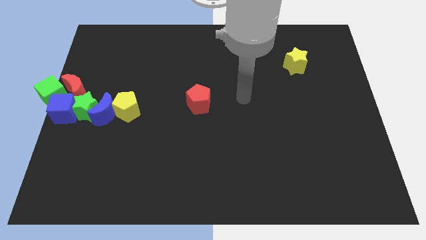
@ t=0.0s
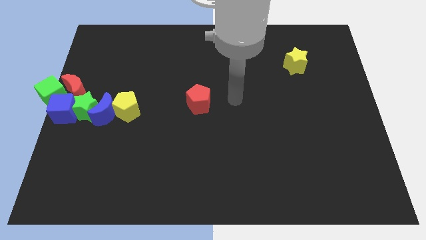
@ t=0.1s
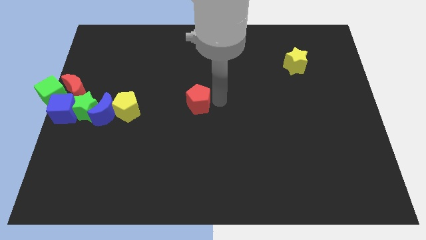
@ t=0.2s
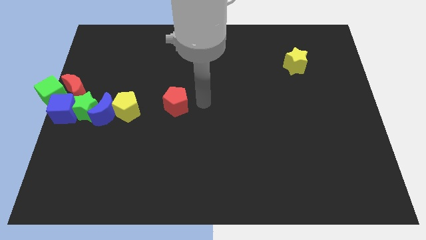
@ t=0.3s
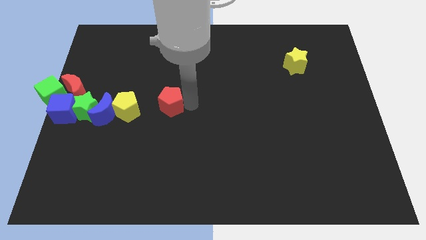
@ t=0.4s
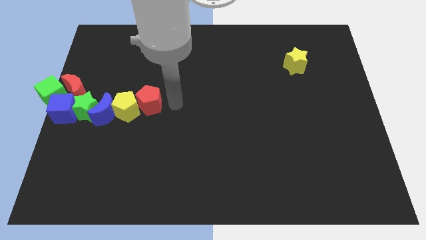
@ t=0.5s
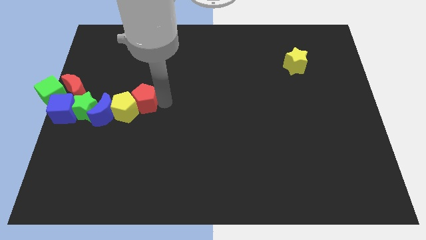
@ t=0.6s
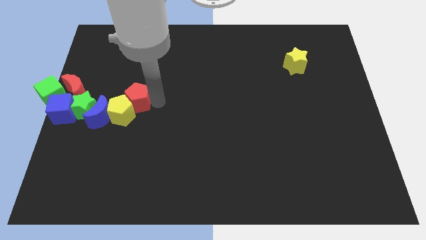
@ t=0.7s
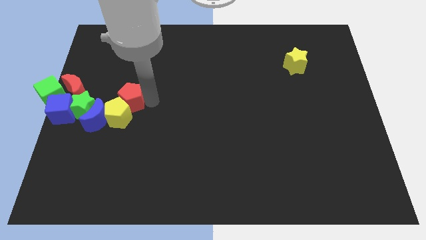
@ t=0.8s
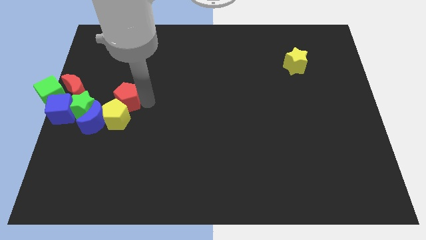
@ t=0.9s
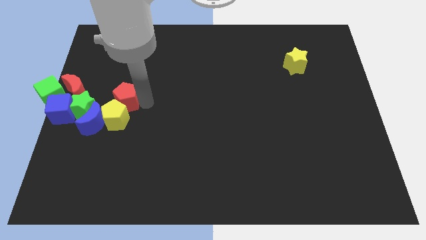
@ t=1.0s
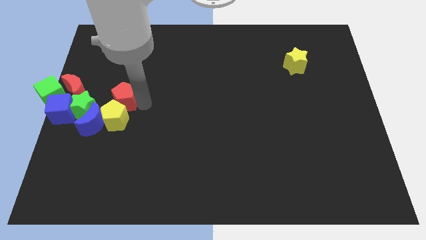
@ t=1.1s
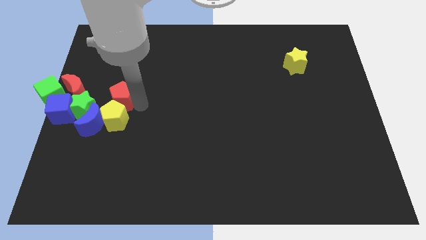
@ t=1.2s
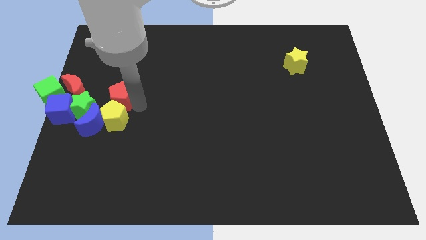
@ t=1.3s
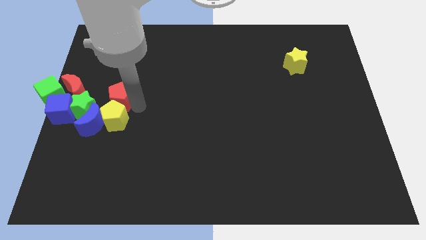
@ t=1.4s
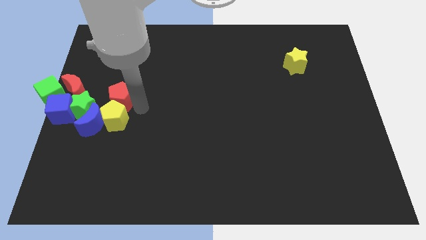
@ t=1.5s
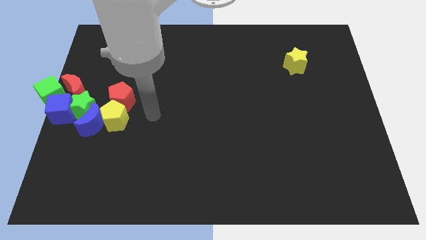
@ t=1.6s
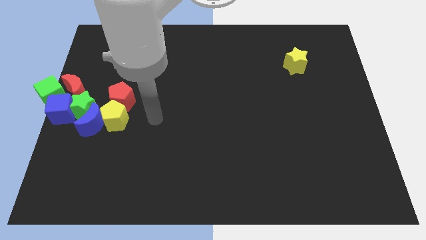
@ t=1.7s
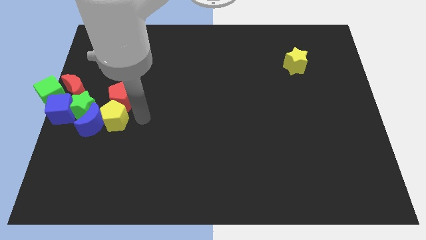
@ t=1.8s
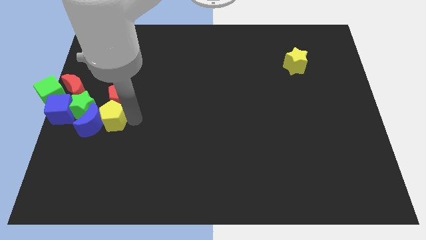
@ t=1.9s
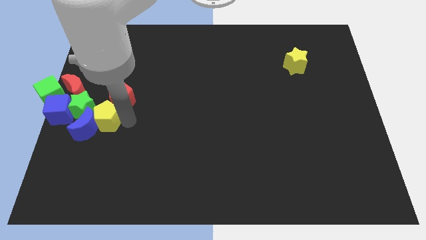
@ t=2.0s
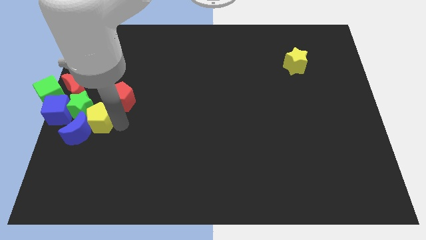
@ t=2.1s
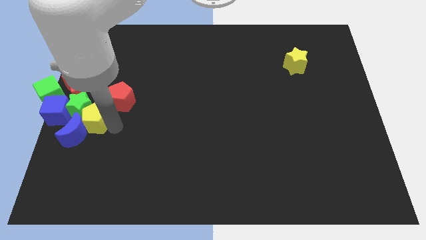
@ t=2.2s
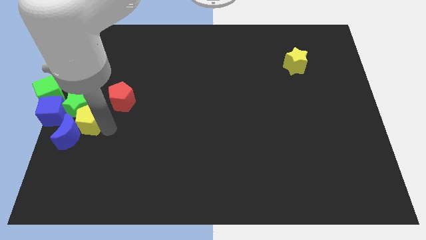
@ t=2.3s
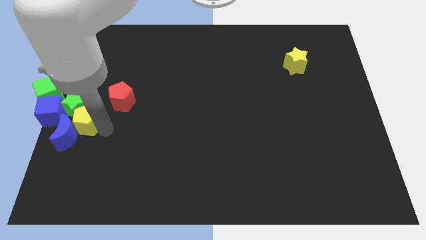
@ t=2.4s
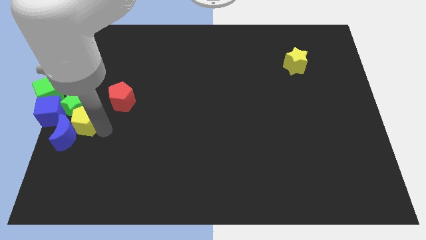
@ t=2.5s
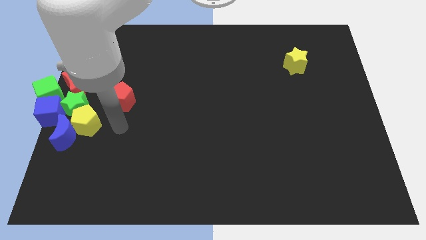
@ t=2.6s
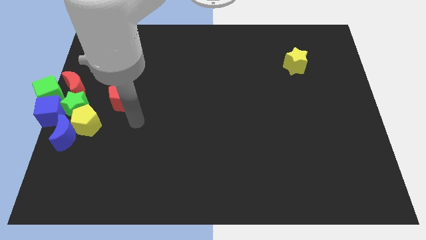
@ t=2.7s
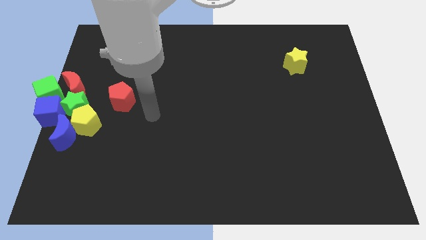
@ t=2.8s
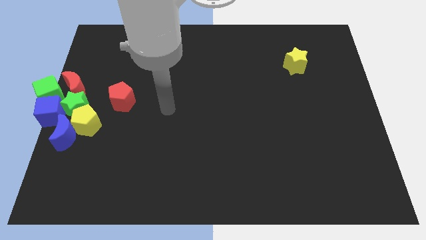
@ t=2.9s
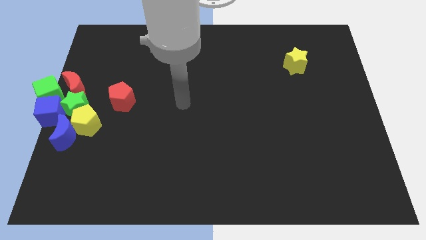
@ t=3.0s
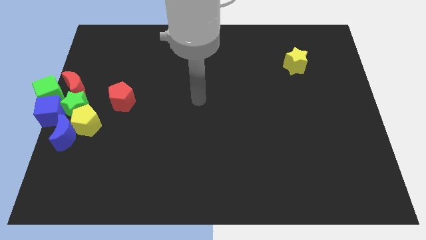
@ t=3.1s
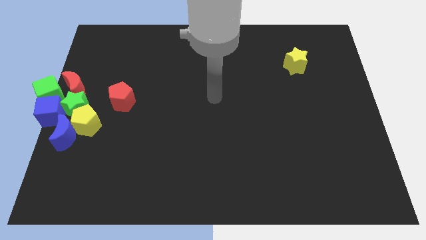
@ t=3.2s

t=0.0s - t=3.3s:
separate red pentagon from group of blocks

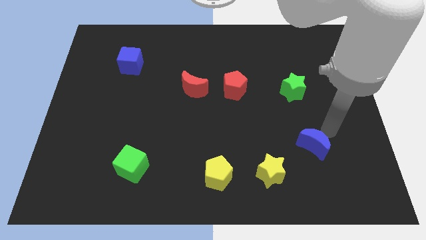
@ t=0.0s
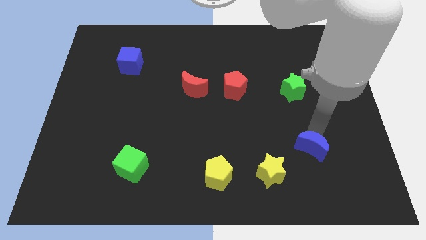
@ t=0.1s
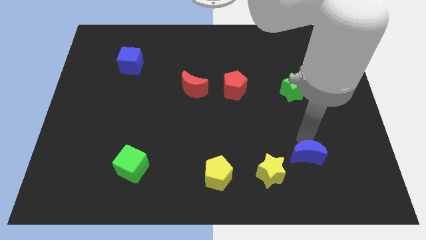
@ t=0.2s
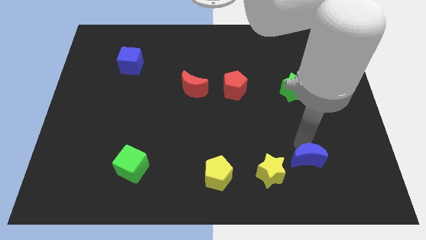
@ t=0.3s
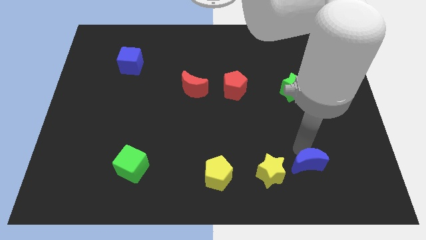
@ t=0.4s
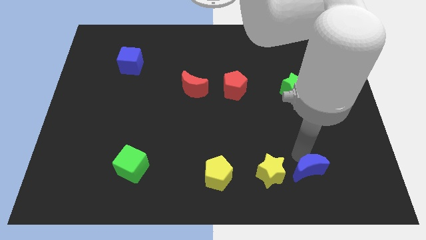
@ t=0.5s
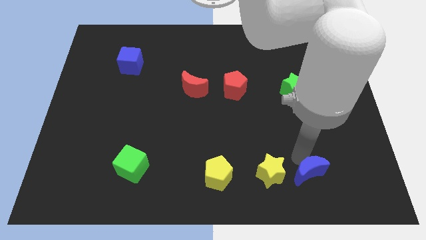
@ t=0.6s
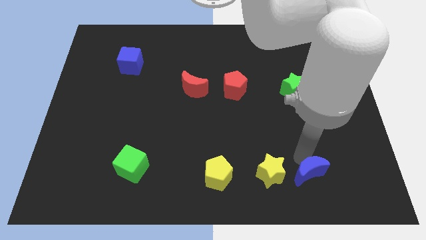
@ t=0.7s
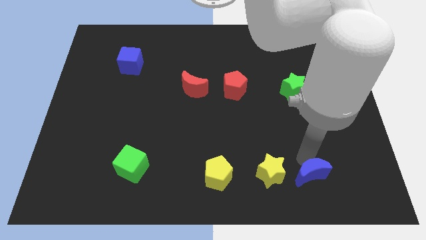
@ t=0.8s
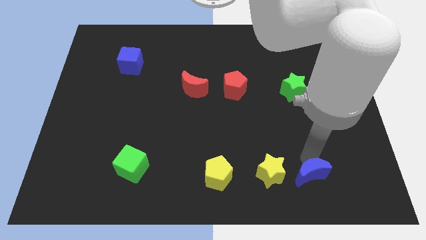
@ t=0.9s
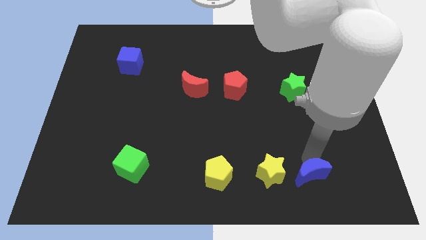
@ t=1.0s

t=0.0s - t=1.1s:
place the blue moon right to the yellow star

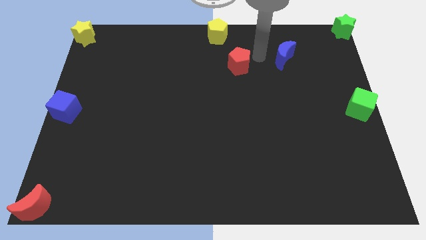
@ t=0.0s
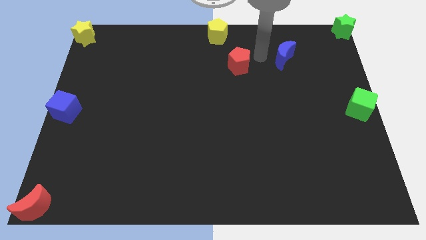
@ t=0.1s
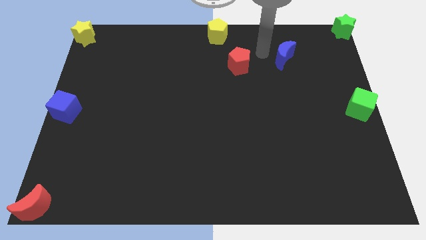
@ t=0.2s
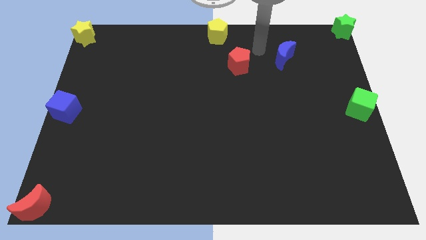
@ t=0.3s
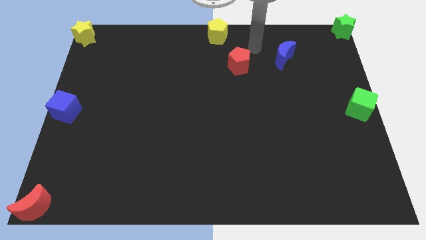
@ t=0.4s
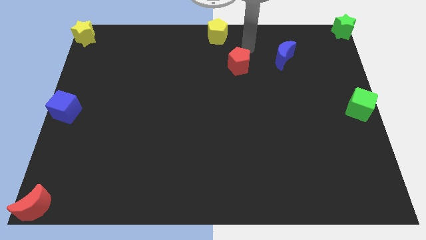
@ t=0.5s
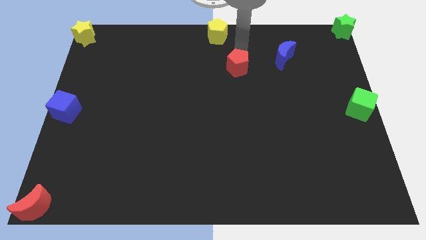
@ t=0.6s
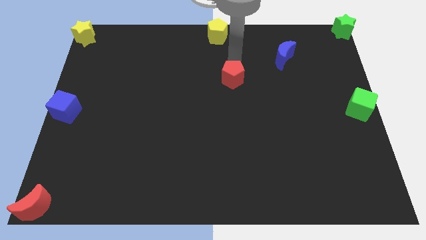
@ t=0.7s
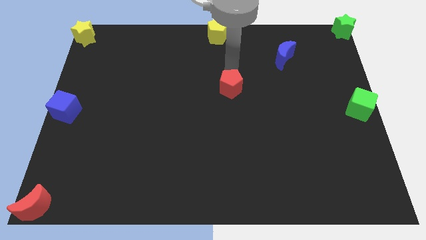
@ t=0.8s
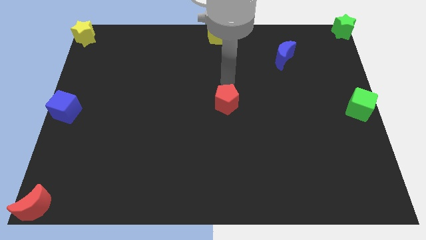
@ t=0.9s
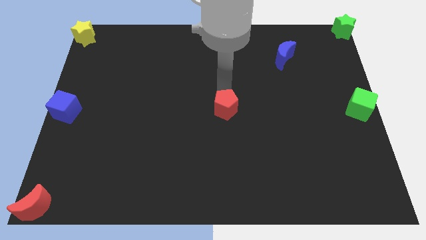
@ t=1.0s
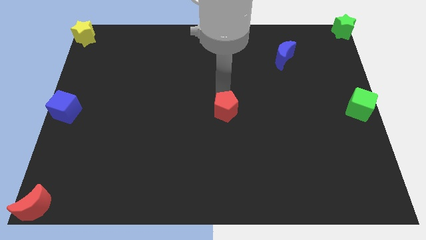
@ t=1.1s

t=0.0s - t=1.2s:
push the red pentagon to the center of the board

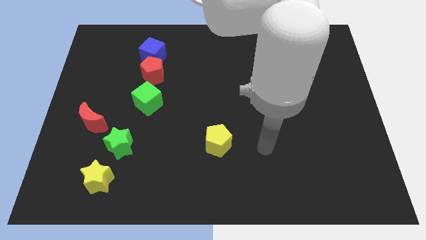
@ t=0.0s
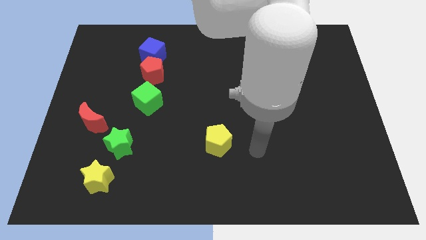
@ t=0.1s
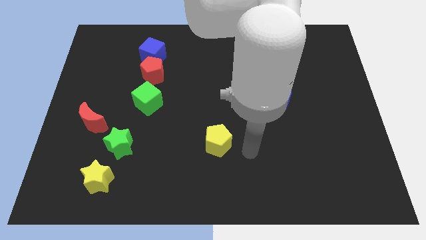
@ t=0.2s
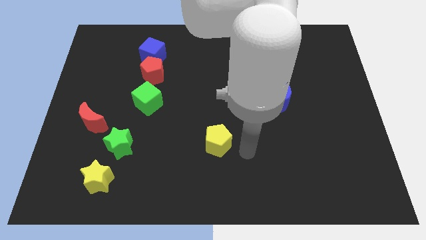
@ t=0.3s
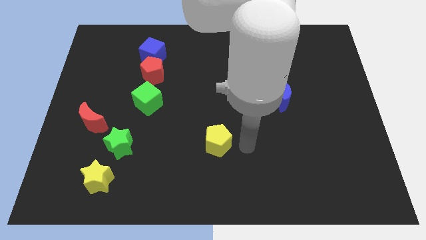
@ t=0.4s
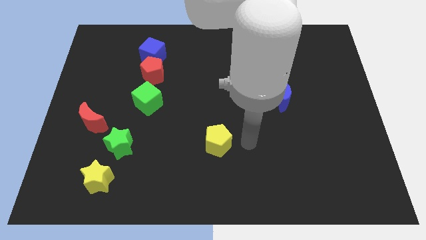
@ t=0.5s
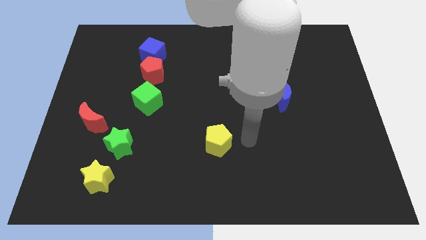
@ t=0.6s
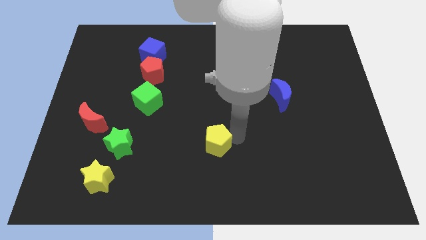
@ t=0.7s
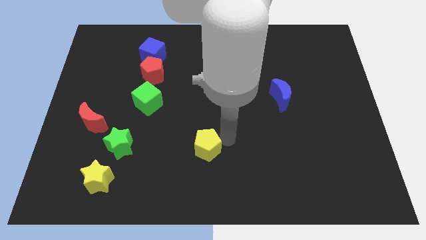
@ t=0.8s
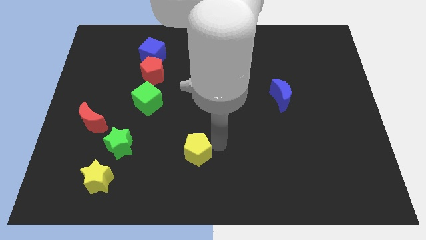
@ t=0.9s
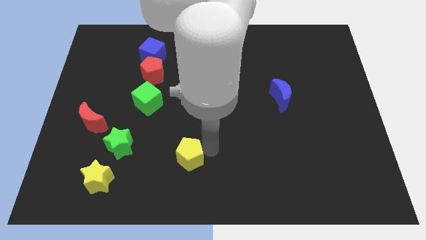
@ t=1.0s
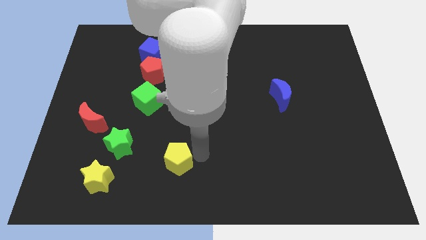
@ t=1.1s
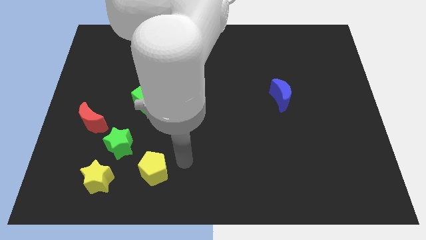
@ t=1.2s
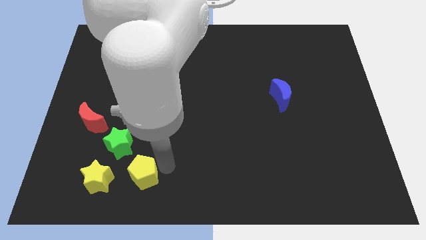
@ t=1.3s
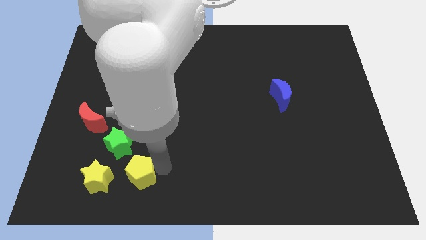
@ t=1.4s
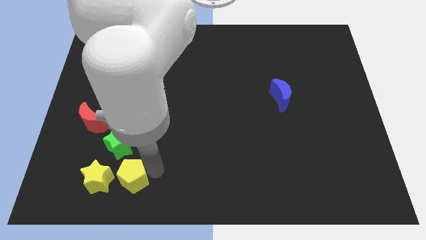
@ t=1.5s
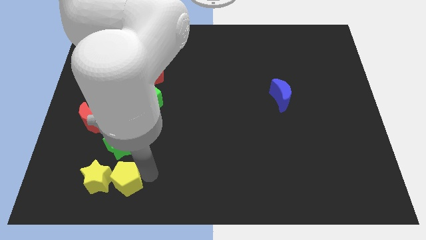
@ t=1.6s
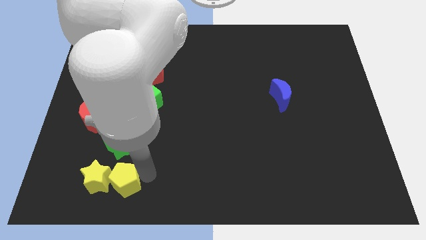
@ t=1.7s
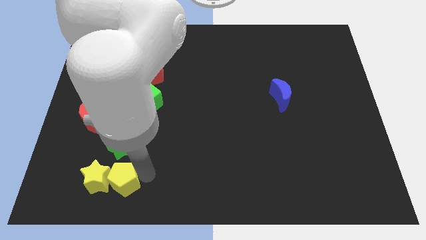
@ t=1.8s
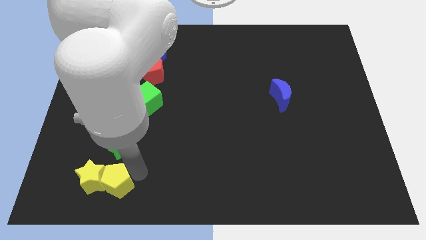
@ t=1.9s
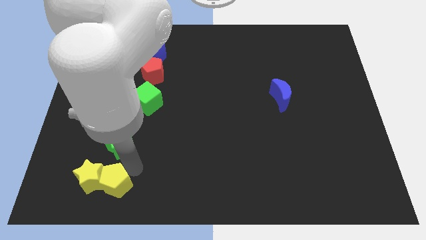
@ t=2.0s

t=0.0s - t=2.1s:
push the yellow pentagon into the yellow star

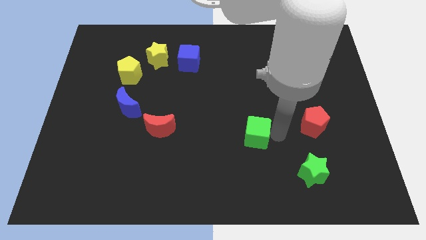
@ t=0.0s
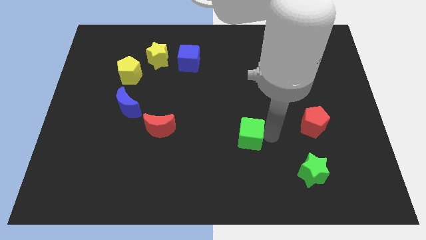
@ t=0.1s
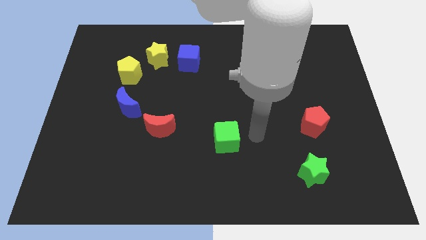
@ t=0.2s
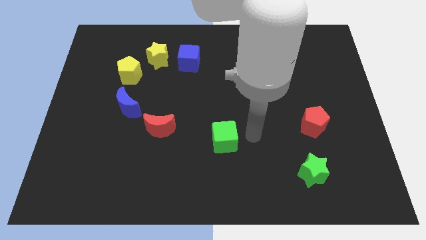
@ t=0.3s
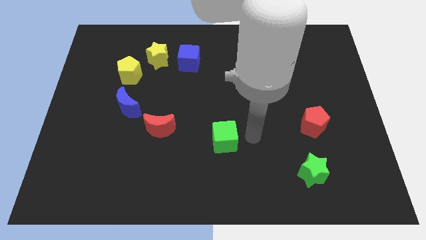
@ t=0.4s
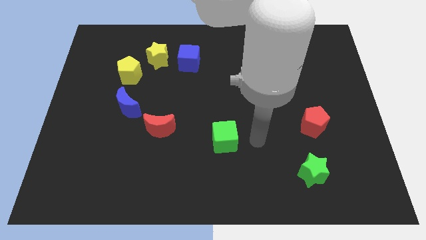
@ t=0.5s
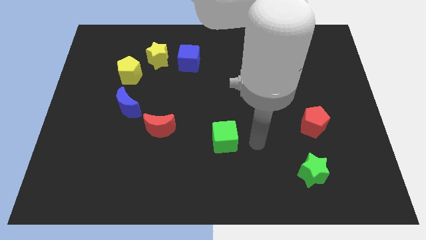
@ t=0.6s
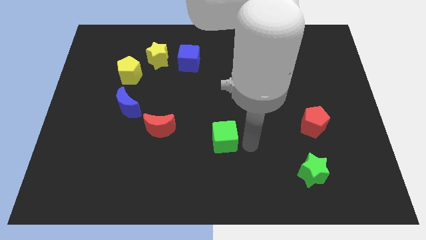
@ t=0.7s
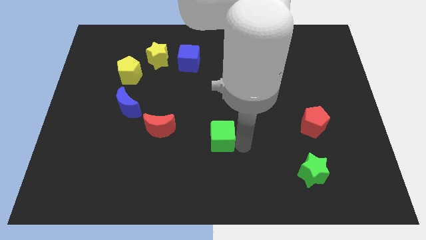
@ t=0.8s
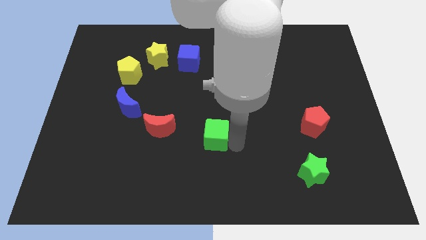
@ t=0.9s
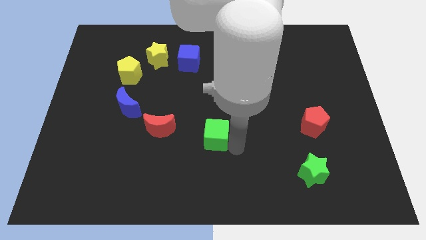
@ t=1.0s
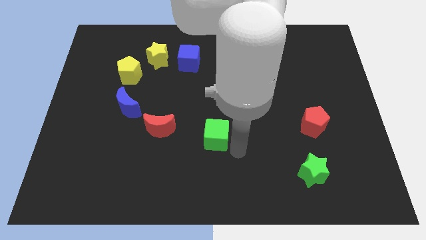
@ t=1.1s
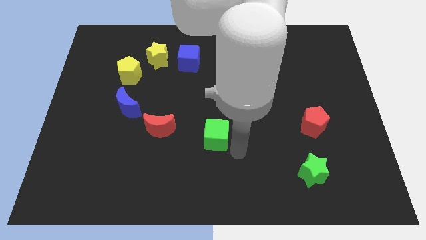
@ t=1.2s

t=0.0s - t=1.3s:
move the green cube slightly to the left
